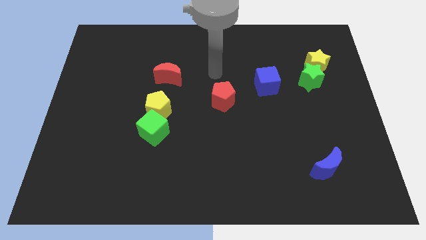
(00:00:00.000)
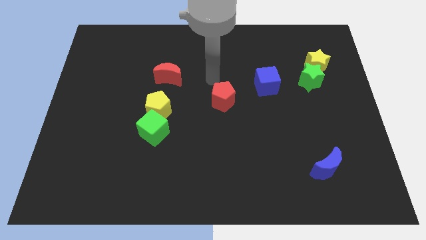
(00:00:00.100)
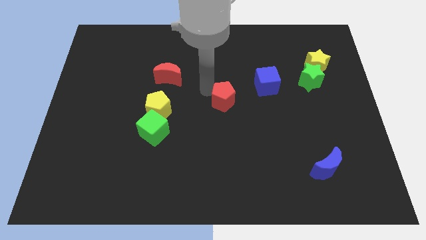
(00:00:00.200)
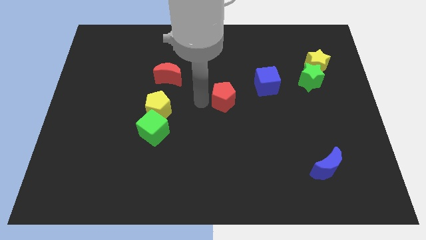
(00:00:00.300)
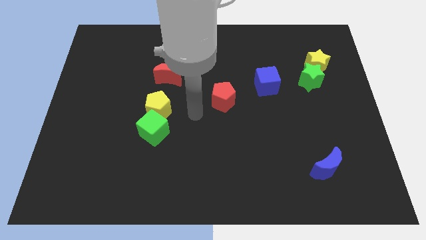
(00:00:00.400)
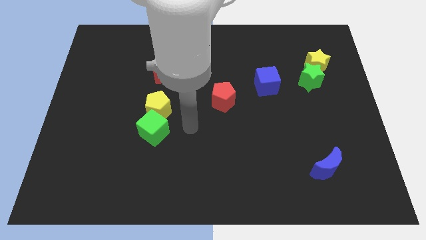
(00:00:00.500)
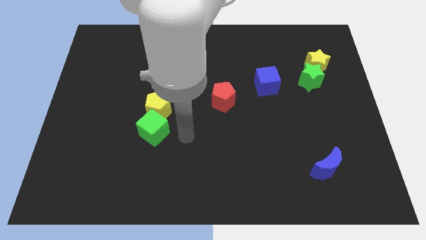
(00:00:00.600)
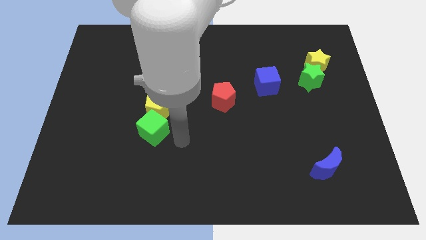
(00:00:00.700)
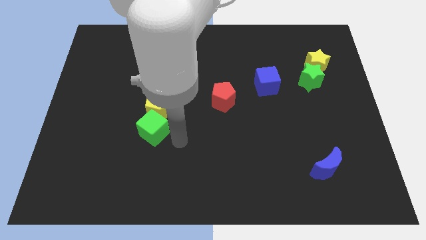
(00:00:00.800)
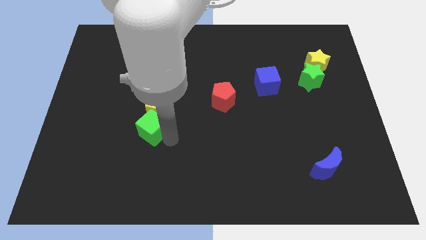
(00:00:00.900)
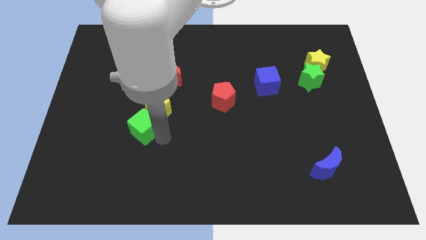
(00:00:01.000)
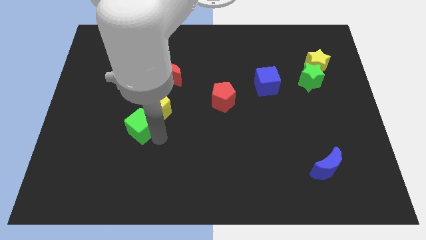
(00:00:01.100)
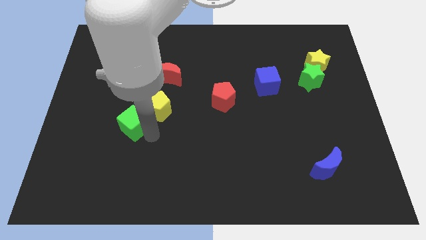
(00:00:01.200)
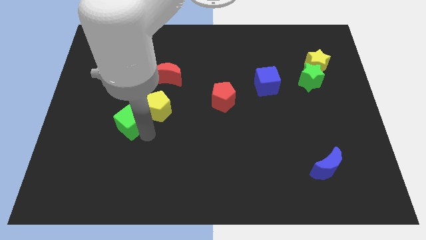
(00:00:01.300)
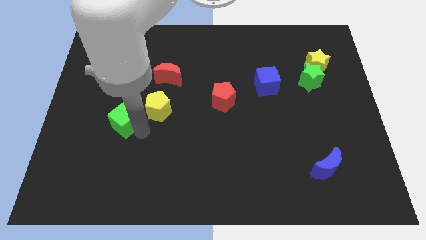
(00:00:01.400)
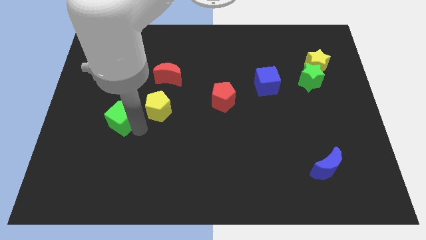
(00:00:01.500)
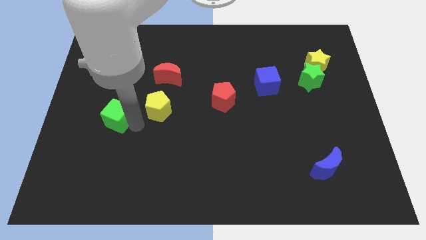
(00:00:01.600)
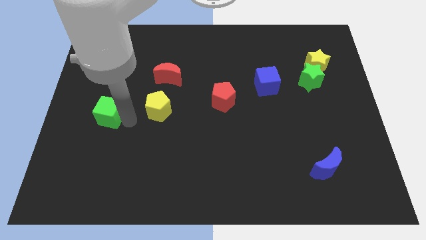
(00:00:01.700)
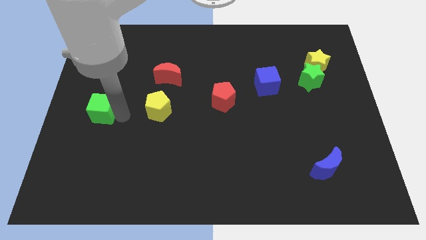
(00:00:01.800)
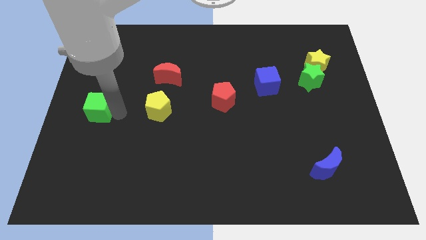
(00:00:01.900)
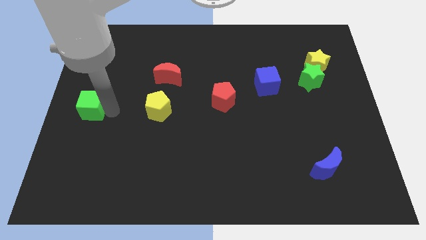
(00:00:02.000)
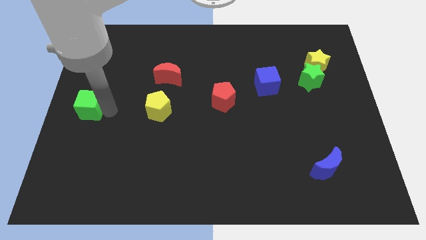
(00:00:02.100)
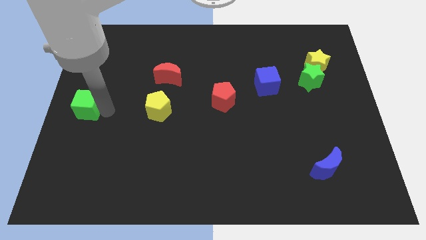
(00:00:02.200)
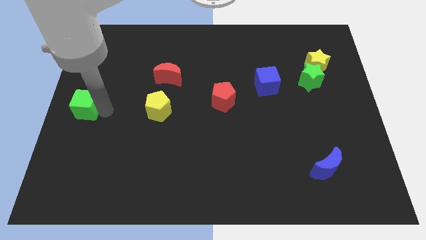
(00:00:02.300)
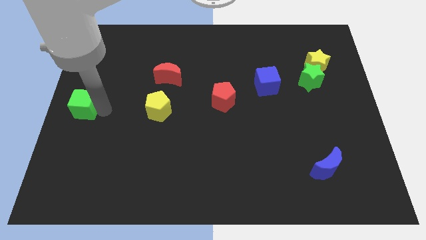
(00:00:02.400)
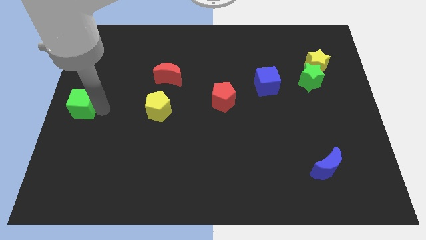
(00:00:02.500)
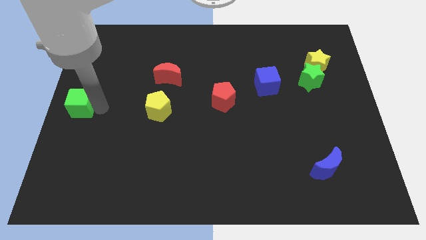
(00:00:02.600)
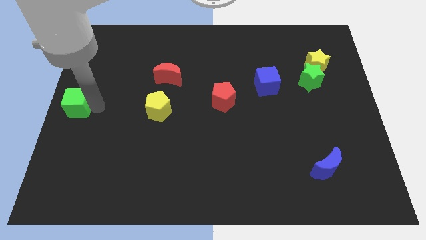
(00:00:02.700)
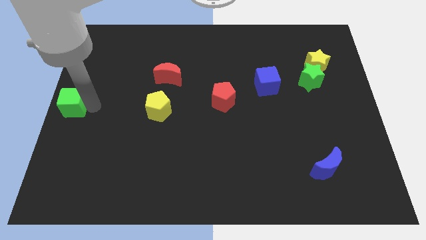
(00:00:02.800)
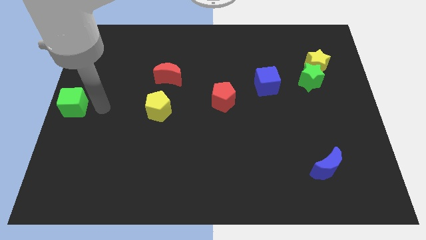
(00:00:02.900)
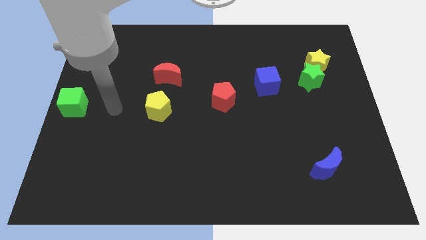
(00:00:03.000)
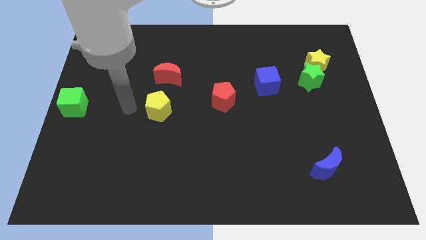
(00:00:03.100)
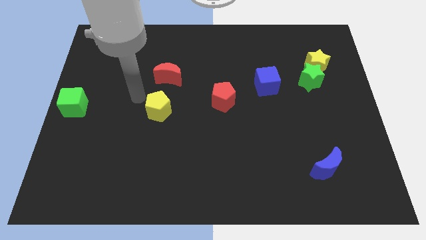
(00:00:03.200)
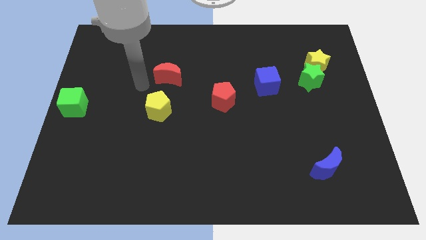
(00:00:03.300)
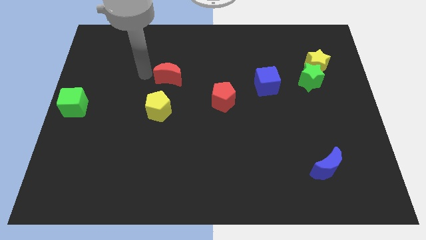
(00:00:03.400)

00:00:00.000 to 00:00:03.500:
move green cube to the left center of the board

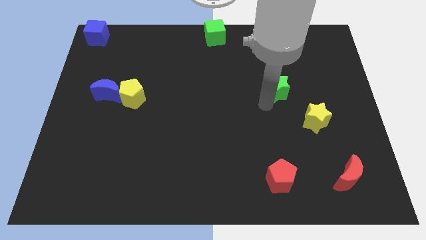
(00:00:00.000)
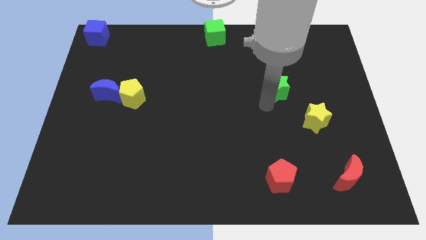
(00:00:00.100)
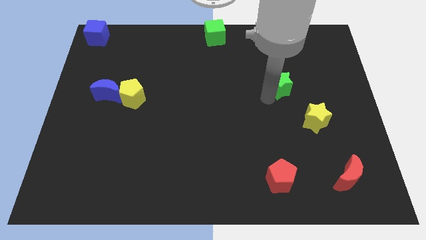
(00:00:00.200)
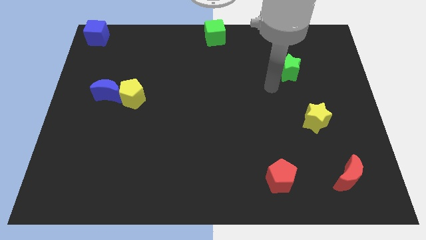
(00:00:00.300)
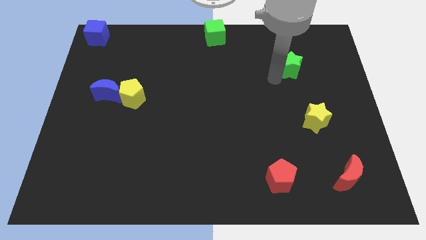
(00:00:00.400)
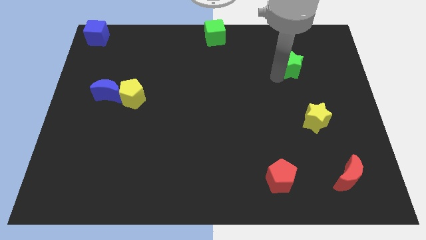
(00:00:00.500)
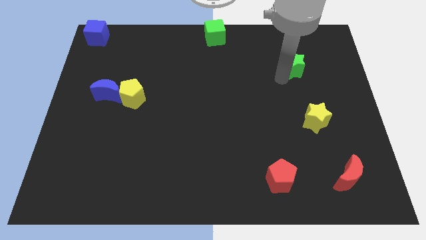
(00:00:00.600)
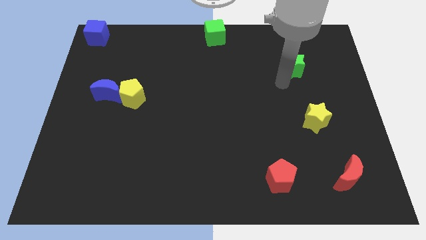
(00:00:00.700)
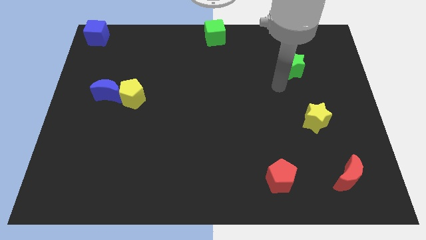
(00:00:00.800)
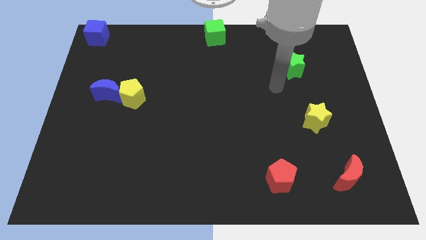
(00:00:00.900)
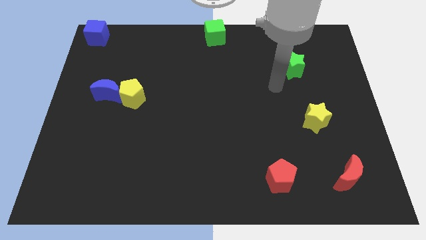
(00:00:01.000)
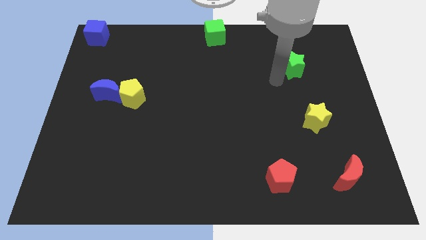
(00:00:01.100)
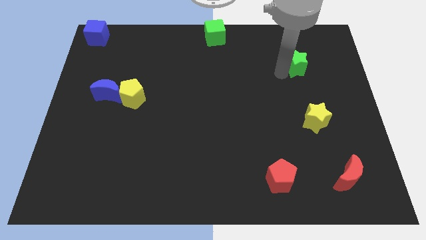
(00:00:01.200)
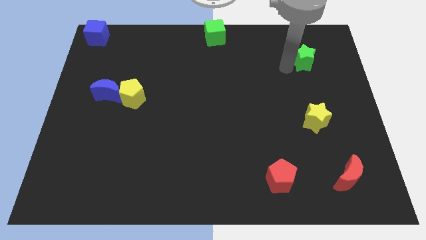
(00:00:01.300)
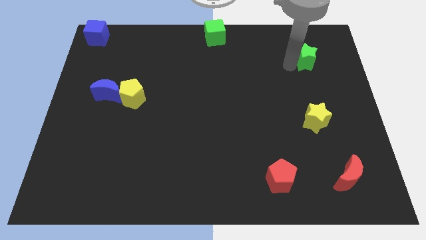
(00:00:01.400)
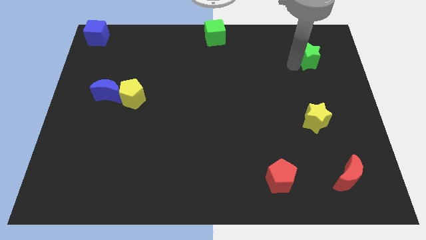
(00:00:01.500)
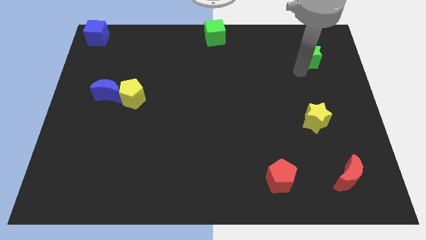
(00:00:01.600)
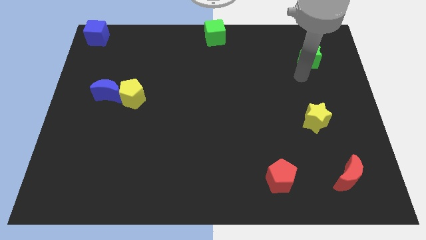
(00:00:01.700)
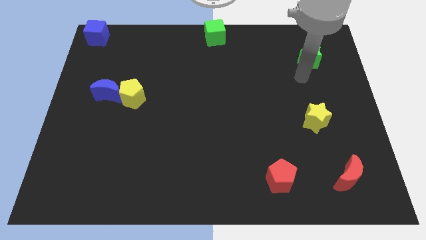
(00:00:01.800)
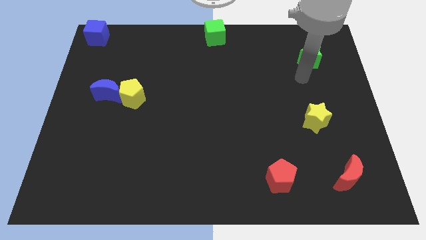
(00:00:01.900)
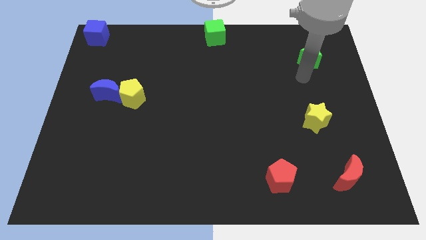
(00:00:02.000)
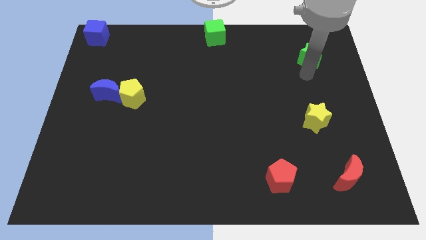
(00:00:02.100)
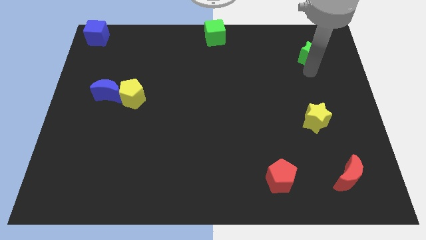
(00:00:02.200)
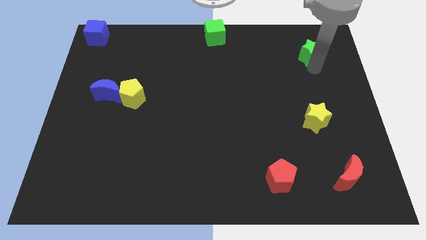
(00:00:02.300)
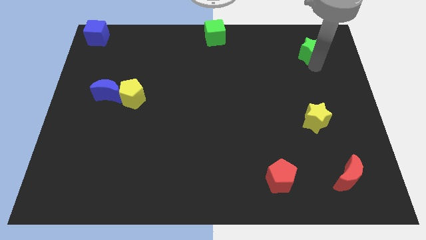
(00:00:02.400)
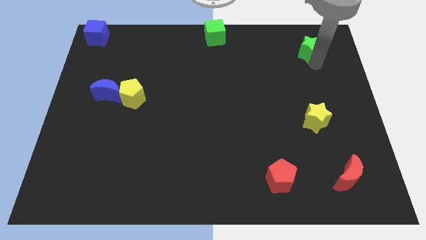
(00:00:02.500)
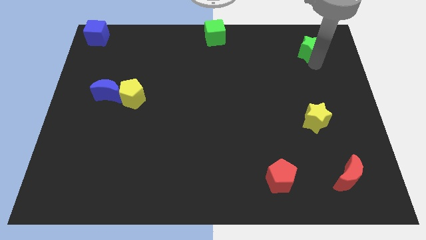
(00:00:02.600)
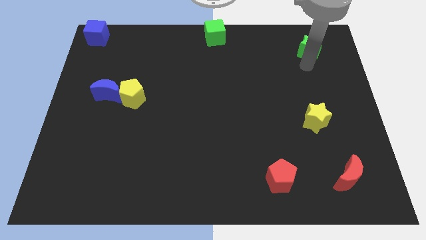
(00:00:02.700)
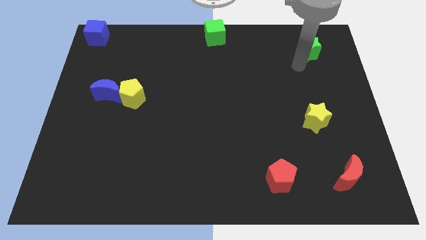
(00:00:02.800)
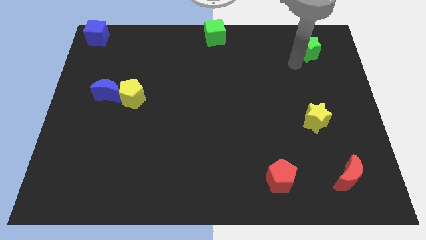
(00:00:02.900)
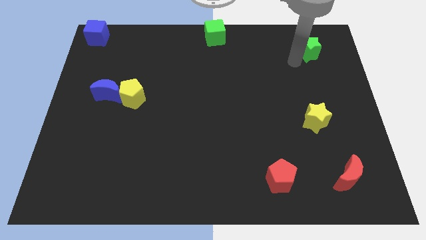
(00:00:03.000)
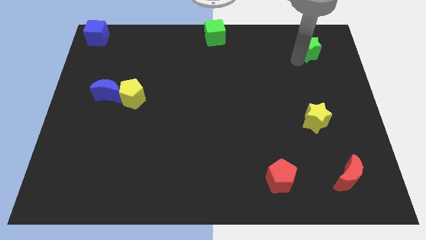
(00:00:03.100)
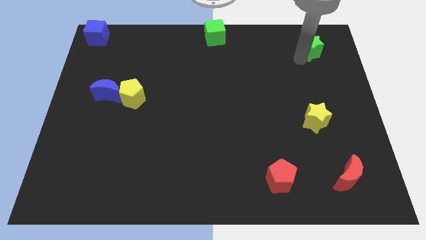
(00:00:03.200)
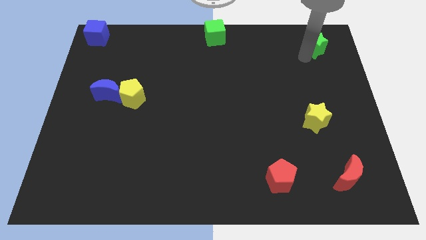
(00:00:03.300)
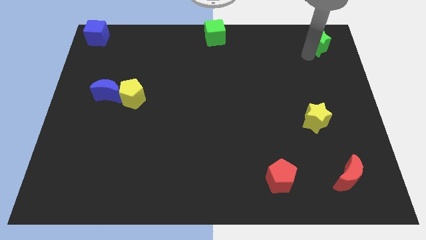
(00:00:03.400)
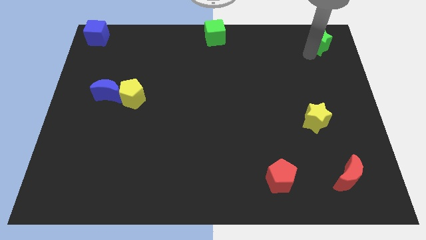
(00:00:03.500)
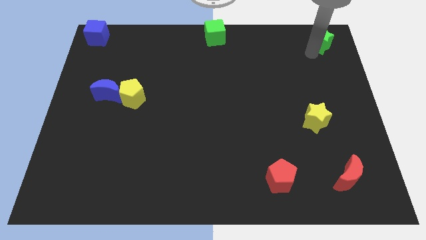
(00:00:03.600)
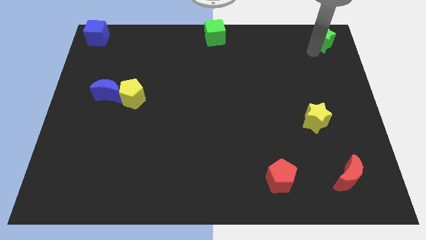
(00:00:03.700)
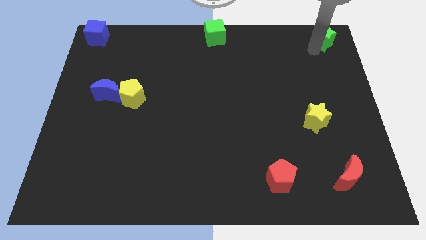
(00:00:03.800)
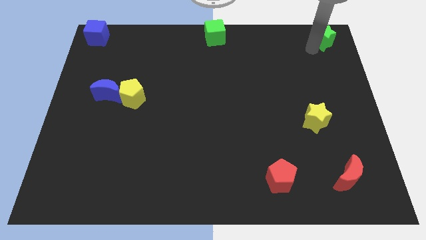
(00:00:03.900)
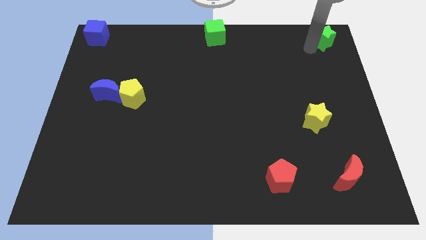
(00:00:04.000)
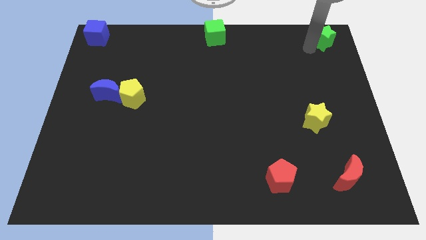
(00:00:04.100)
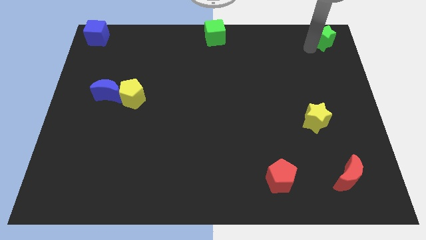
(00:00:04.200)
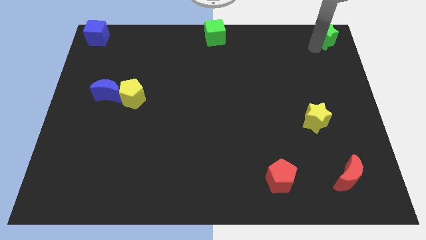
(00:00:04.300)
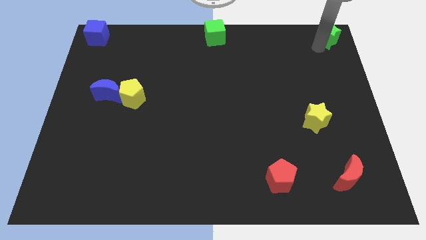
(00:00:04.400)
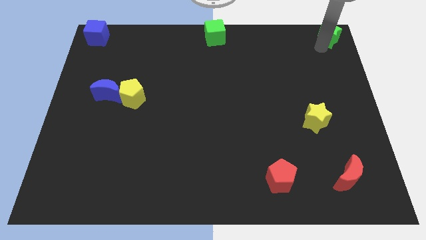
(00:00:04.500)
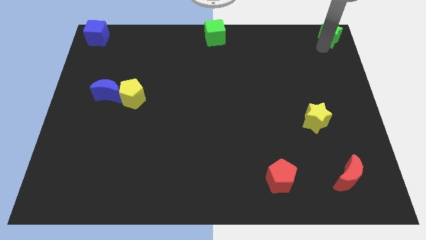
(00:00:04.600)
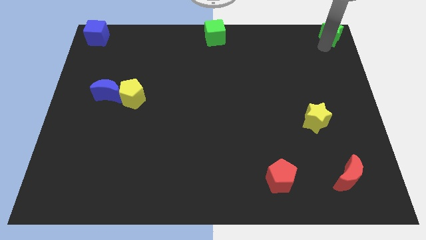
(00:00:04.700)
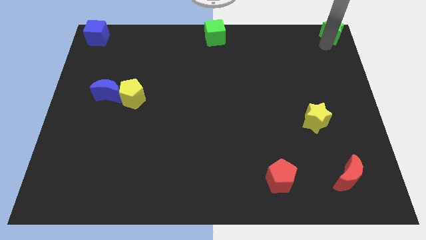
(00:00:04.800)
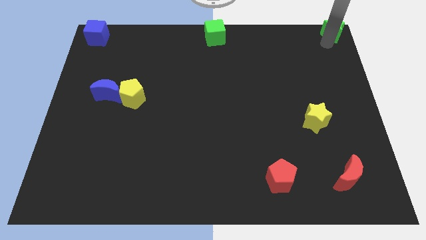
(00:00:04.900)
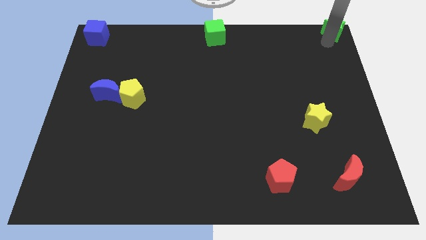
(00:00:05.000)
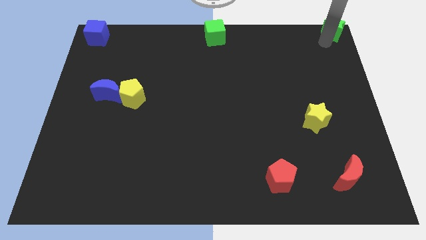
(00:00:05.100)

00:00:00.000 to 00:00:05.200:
place a green star at the top right corner of the board

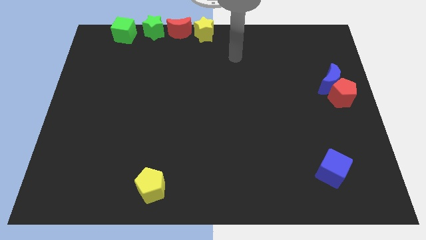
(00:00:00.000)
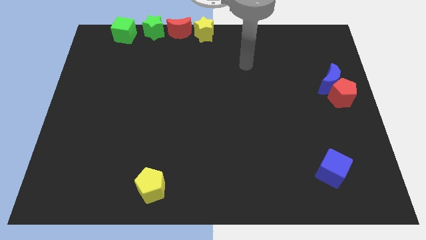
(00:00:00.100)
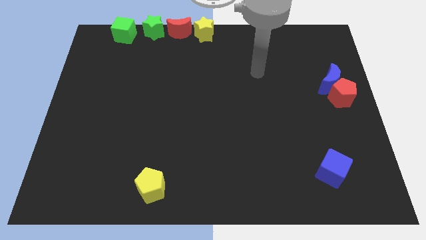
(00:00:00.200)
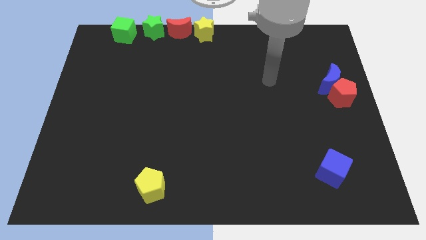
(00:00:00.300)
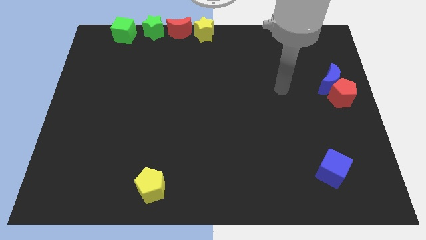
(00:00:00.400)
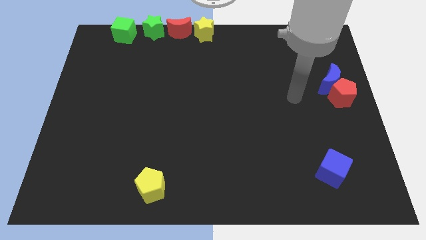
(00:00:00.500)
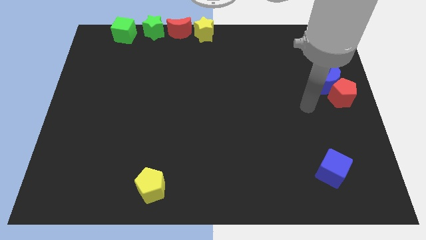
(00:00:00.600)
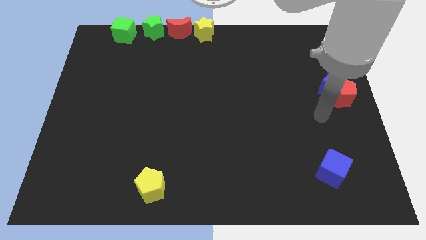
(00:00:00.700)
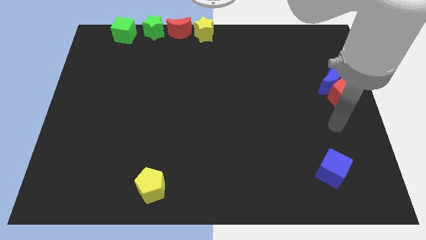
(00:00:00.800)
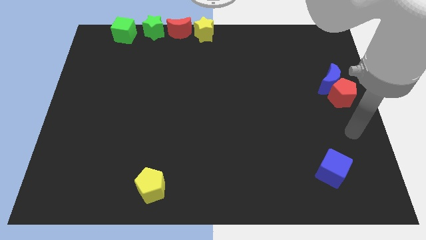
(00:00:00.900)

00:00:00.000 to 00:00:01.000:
place your hand under the red pentagon
